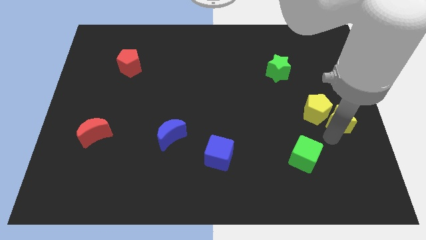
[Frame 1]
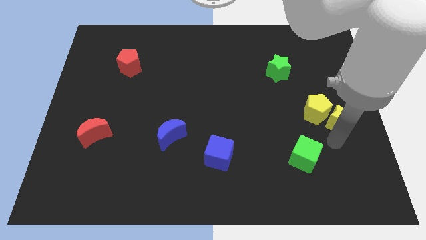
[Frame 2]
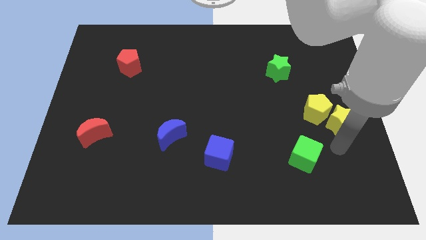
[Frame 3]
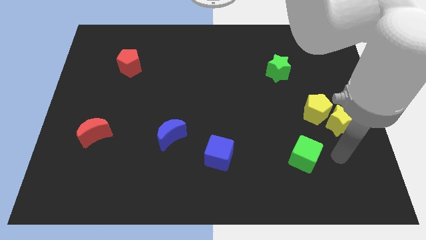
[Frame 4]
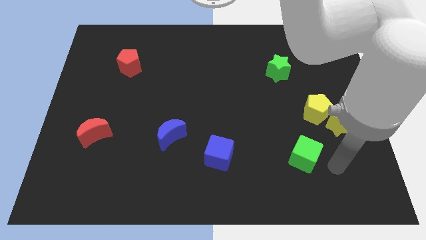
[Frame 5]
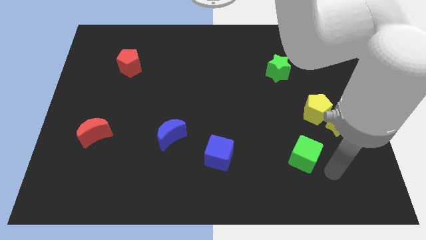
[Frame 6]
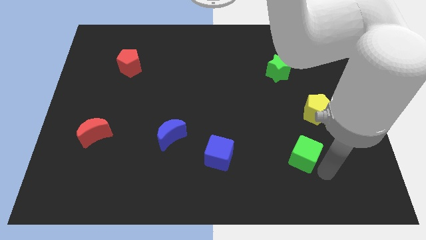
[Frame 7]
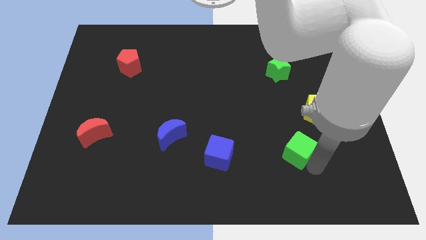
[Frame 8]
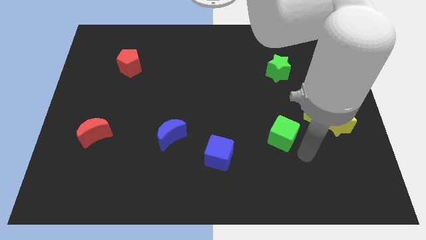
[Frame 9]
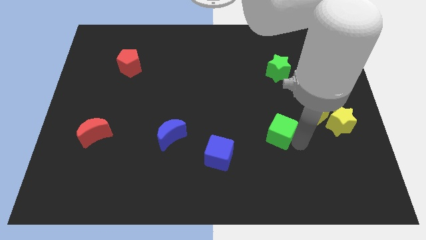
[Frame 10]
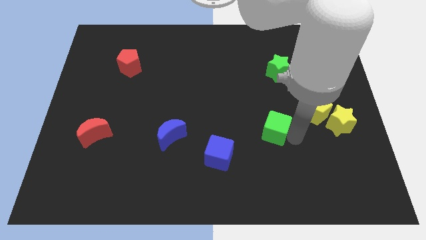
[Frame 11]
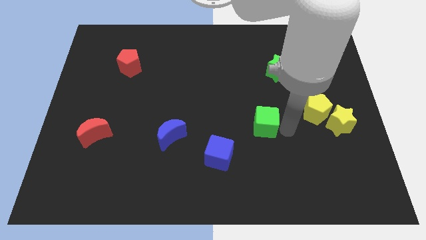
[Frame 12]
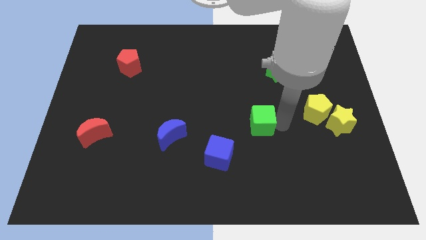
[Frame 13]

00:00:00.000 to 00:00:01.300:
slide the green cube diagonally bottom left to the yellow pentagon

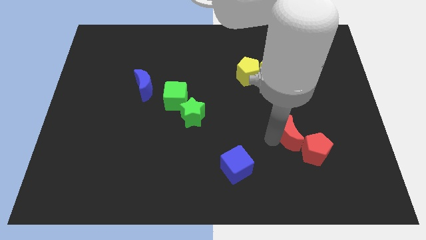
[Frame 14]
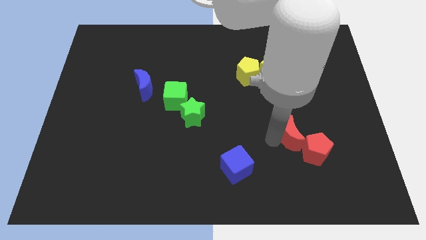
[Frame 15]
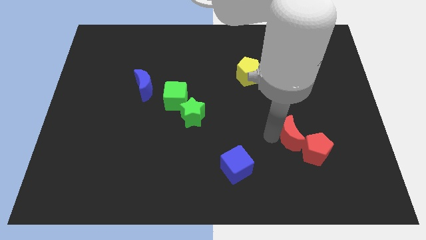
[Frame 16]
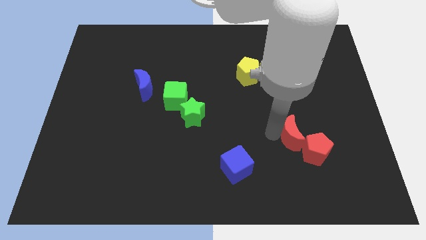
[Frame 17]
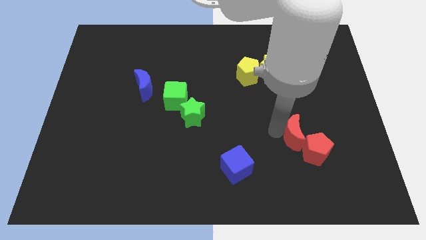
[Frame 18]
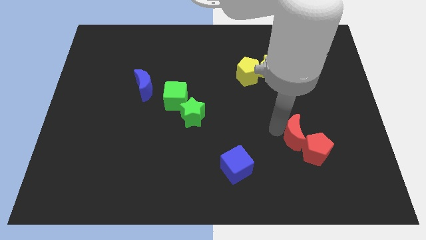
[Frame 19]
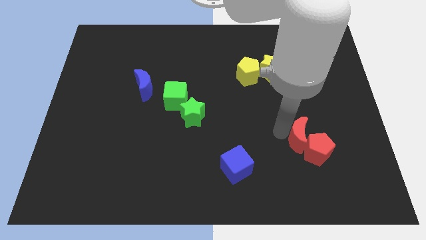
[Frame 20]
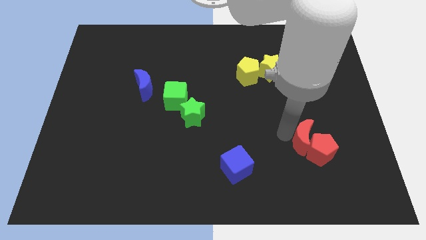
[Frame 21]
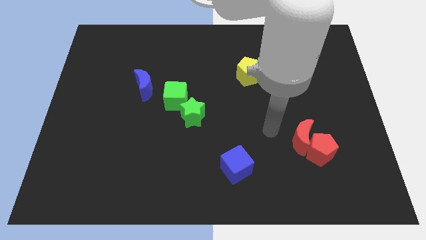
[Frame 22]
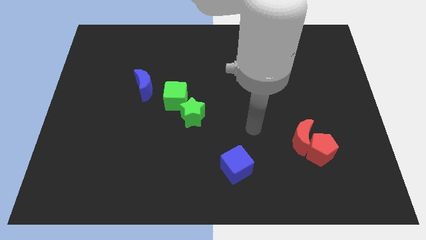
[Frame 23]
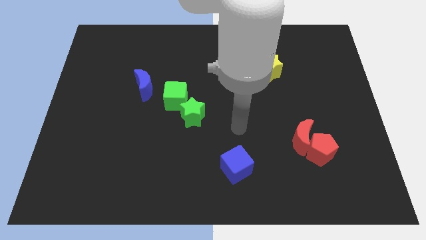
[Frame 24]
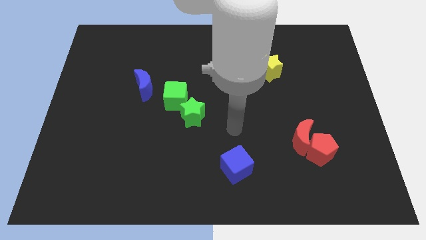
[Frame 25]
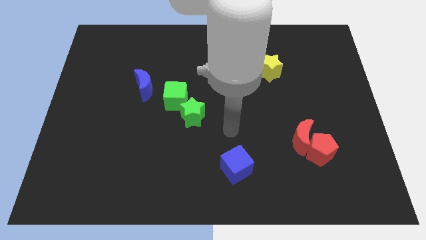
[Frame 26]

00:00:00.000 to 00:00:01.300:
point your hand above the blue cube

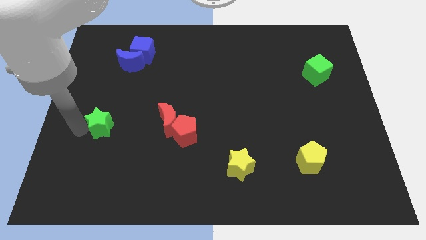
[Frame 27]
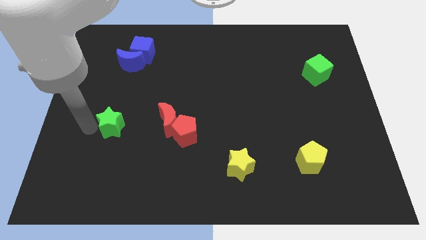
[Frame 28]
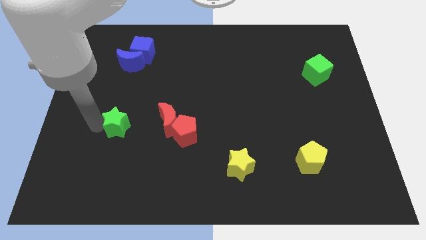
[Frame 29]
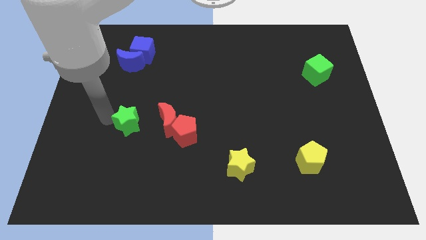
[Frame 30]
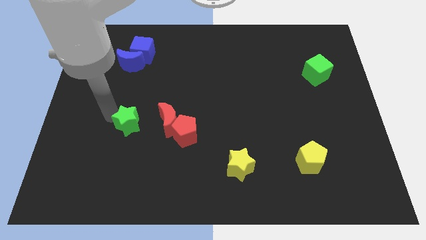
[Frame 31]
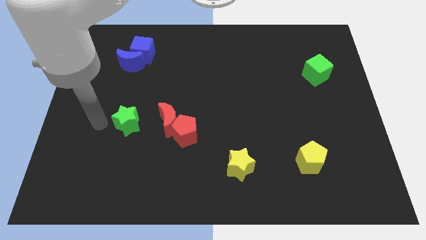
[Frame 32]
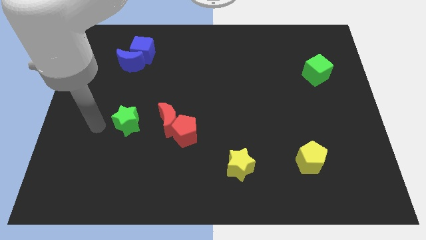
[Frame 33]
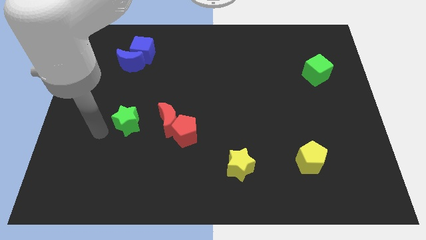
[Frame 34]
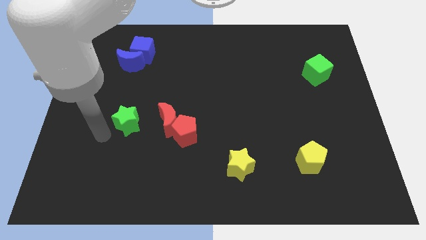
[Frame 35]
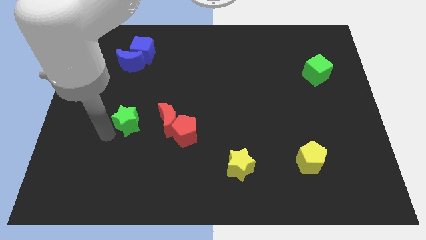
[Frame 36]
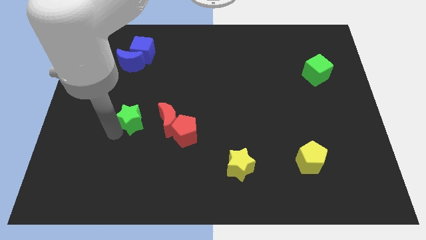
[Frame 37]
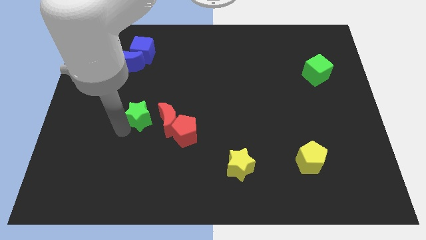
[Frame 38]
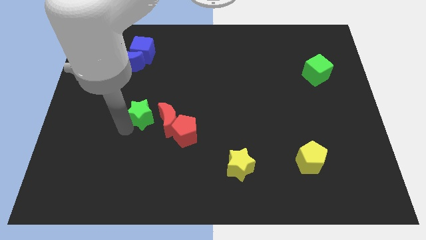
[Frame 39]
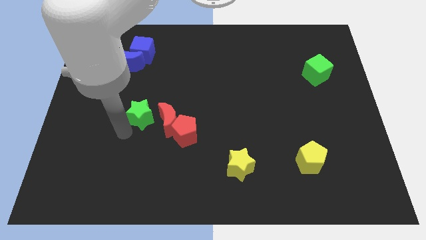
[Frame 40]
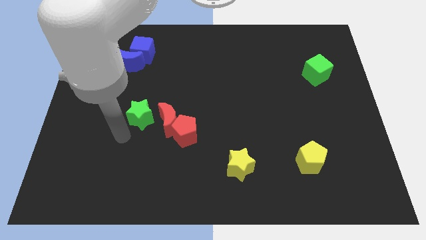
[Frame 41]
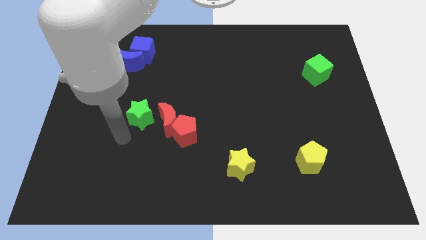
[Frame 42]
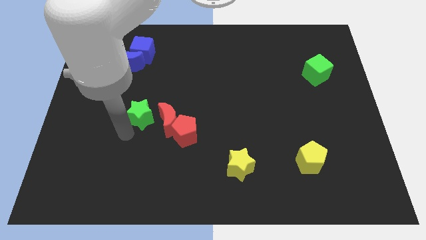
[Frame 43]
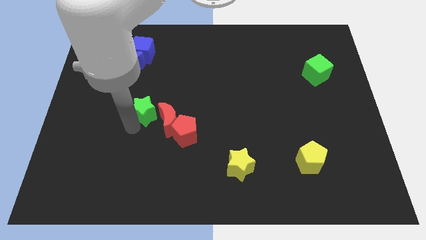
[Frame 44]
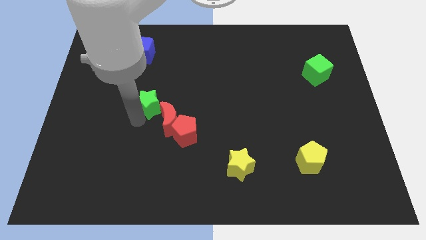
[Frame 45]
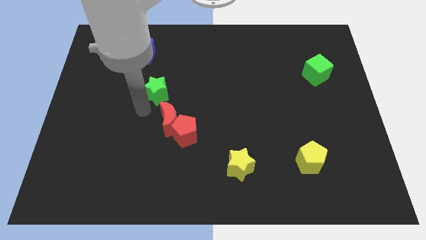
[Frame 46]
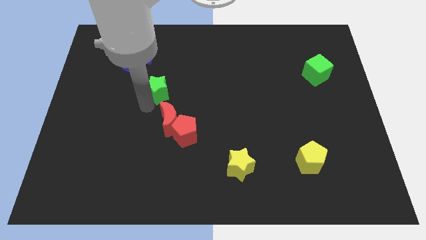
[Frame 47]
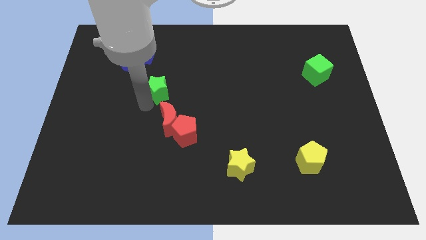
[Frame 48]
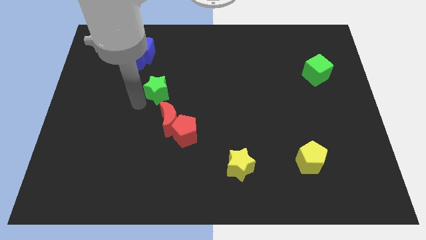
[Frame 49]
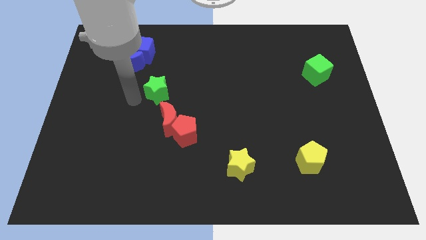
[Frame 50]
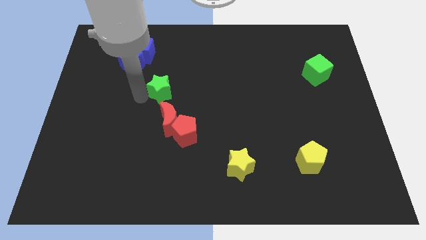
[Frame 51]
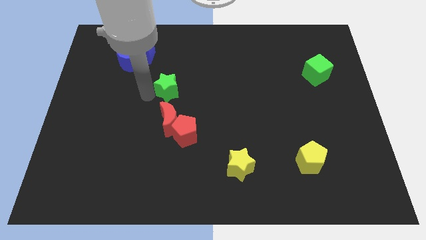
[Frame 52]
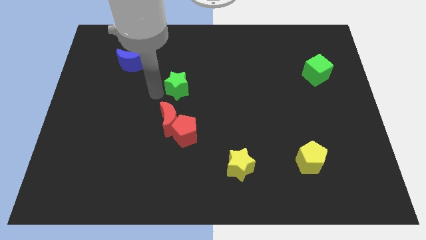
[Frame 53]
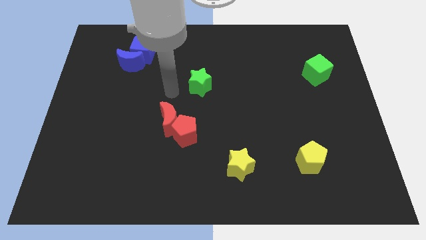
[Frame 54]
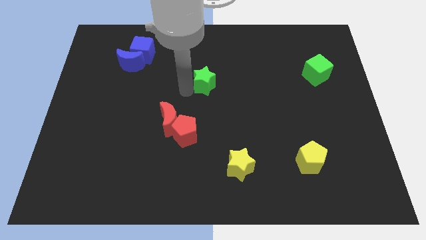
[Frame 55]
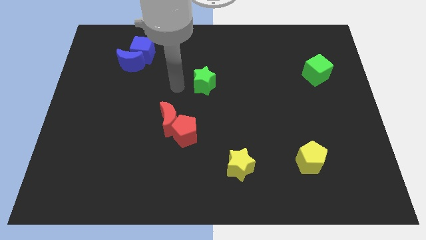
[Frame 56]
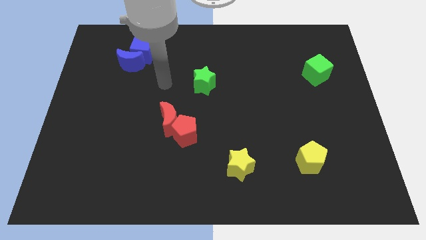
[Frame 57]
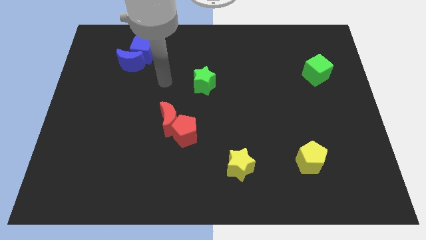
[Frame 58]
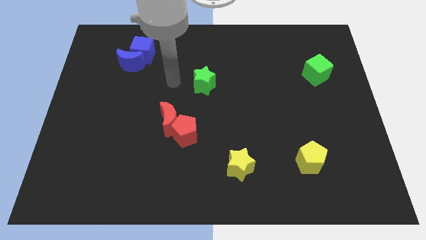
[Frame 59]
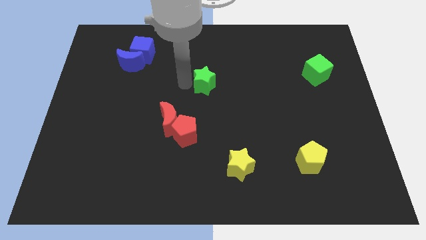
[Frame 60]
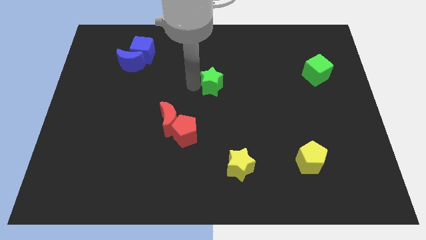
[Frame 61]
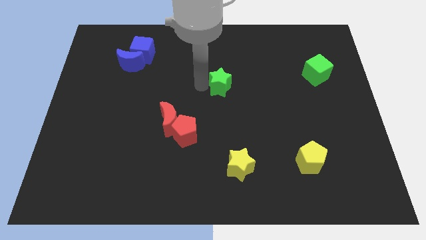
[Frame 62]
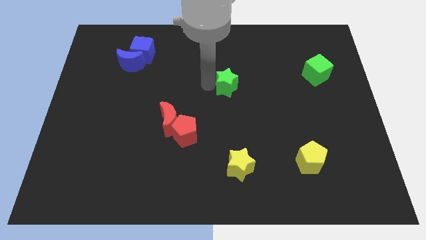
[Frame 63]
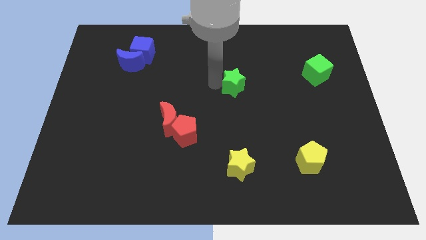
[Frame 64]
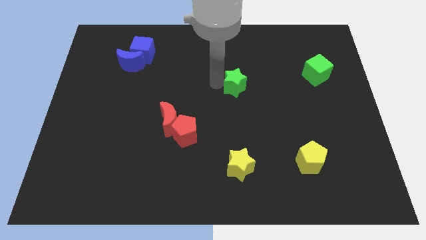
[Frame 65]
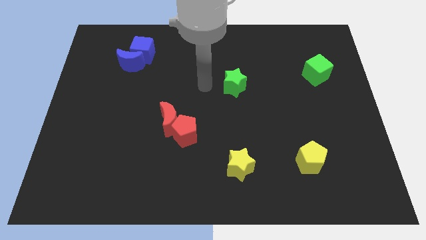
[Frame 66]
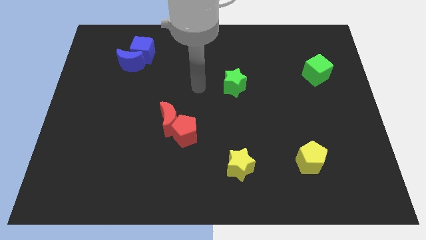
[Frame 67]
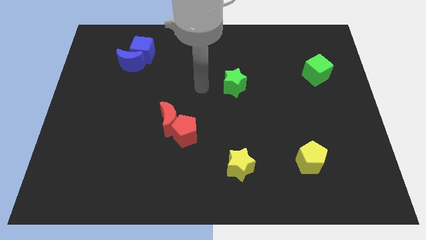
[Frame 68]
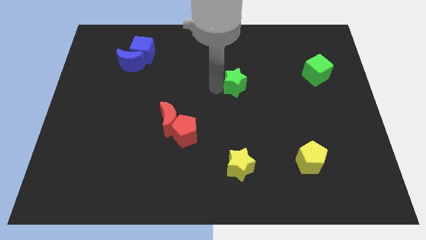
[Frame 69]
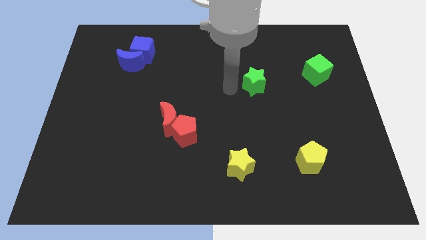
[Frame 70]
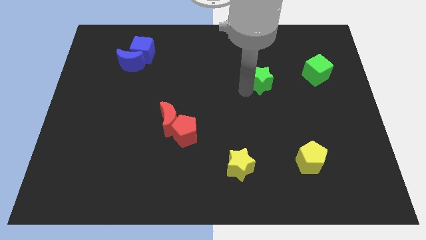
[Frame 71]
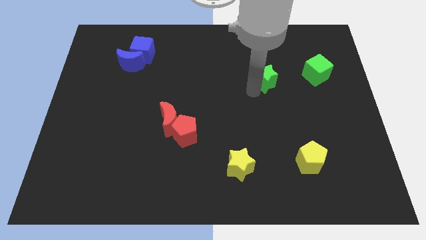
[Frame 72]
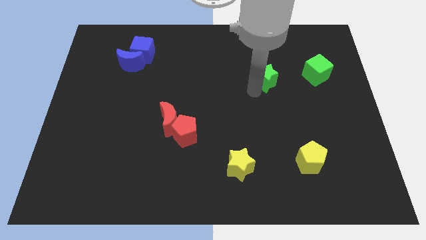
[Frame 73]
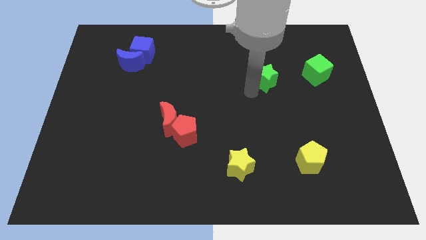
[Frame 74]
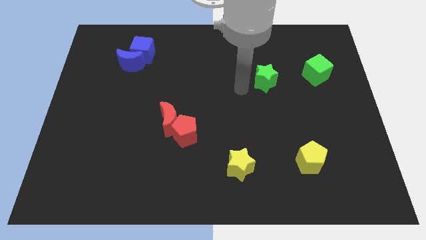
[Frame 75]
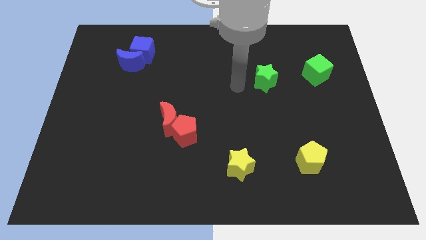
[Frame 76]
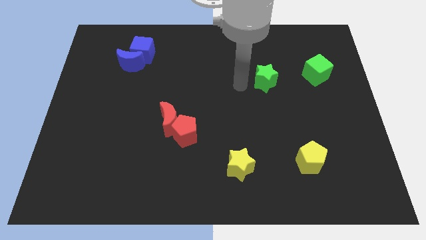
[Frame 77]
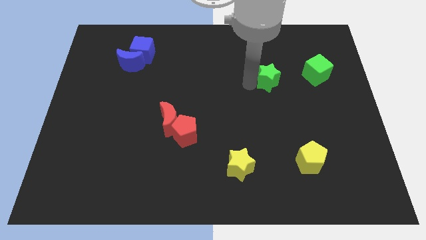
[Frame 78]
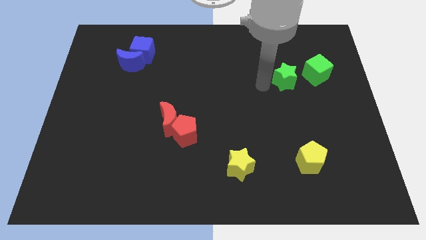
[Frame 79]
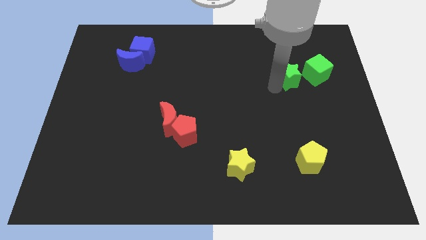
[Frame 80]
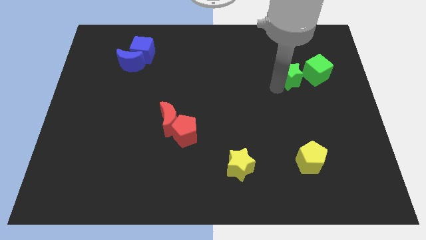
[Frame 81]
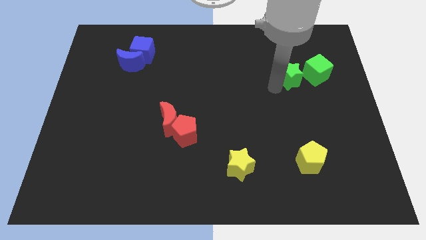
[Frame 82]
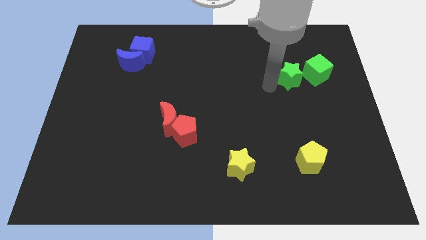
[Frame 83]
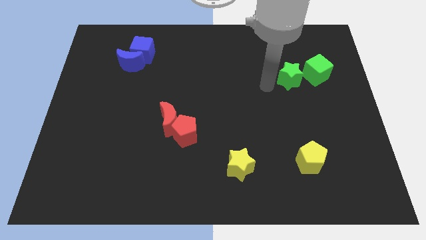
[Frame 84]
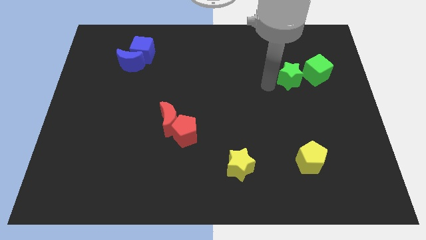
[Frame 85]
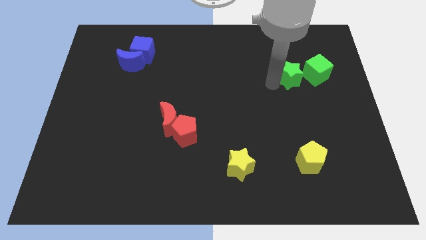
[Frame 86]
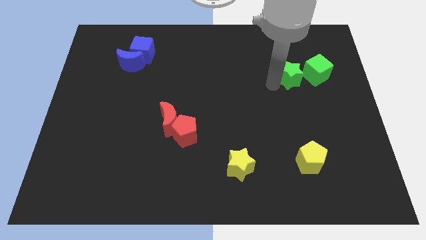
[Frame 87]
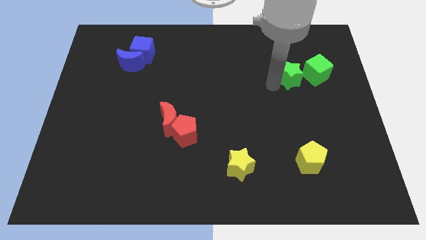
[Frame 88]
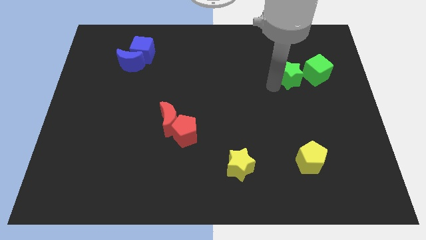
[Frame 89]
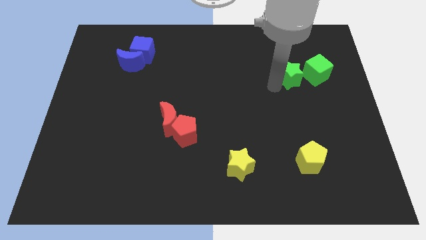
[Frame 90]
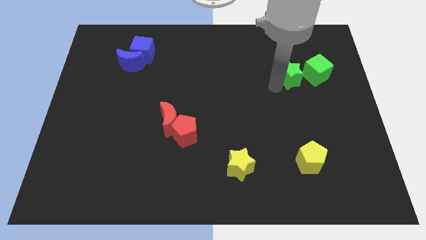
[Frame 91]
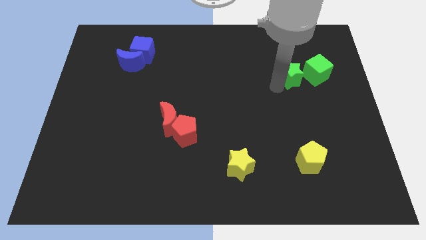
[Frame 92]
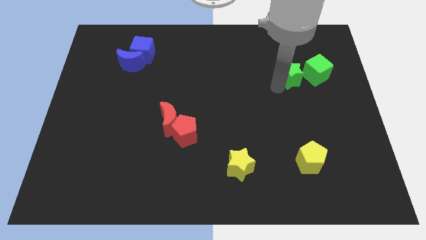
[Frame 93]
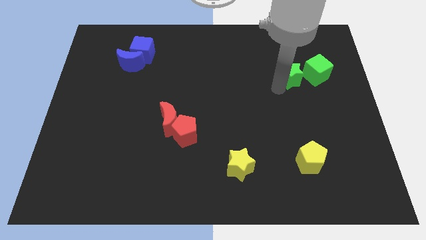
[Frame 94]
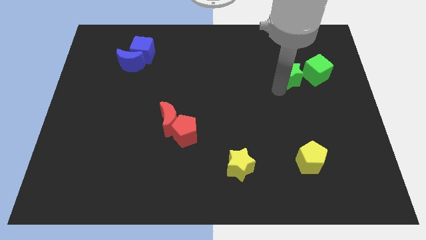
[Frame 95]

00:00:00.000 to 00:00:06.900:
place the green star to the left of the green cube
